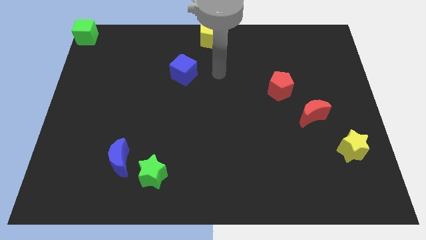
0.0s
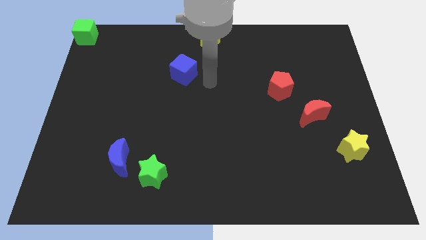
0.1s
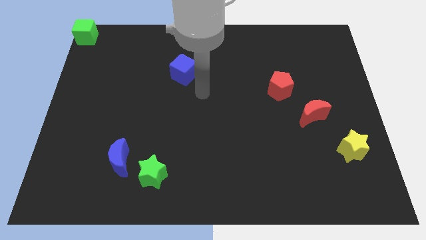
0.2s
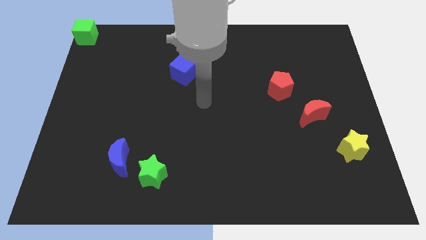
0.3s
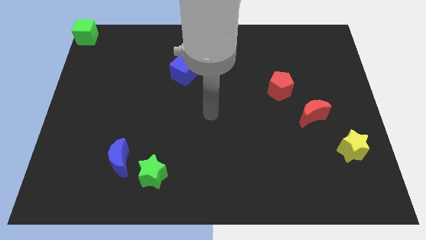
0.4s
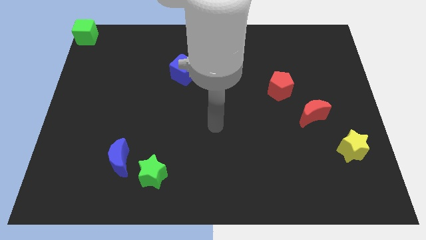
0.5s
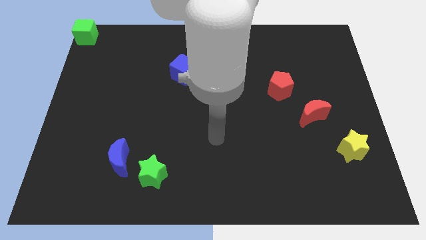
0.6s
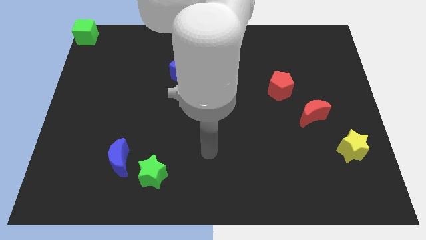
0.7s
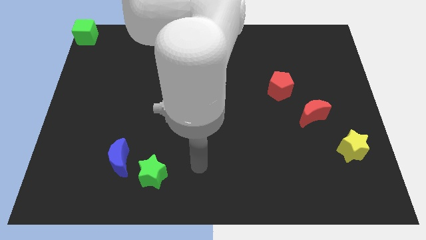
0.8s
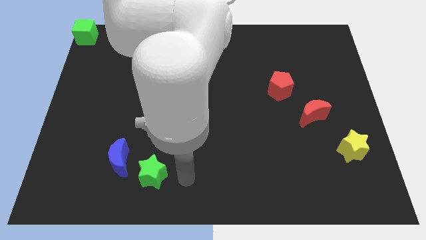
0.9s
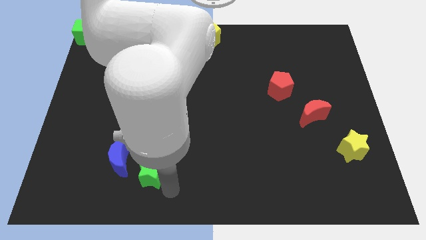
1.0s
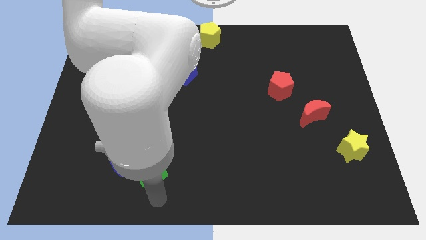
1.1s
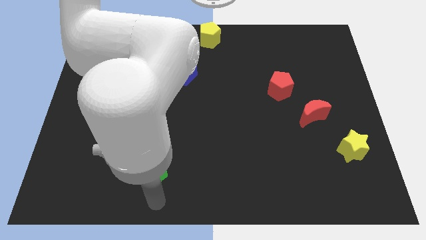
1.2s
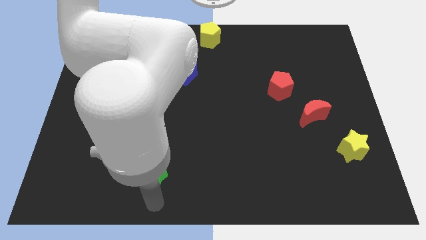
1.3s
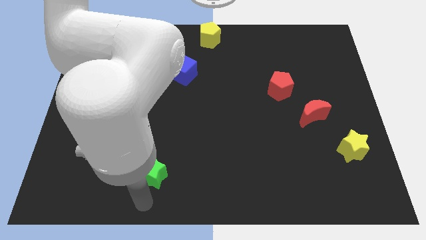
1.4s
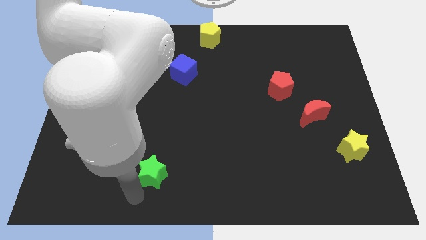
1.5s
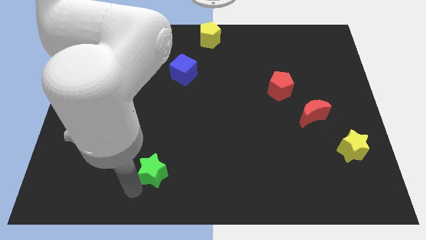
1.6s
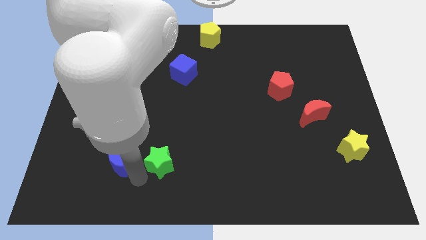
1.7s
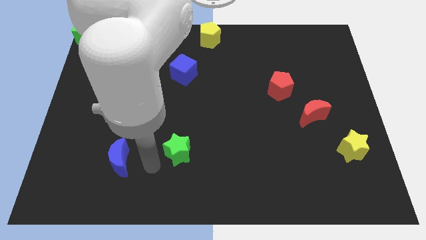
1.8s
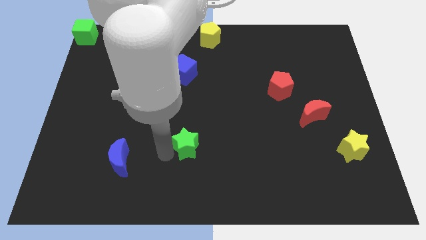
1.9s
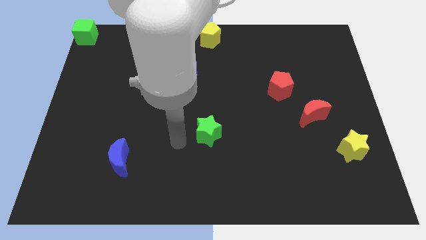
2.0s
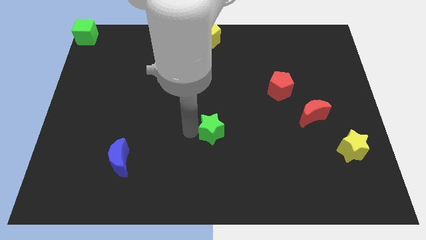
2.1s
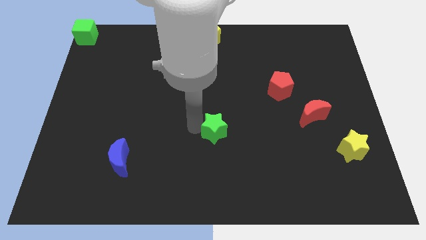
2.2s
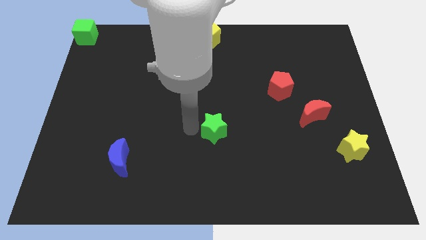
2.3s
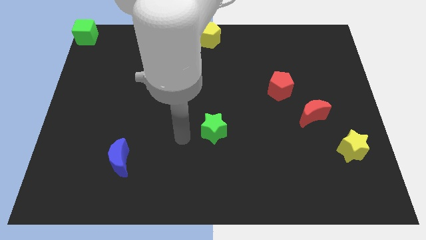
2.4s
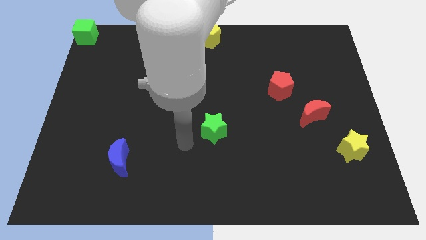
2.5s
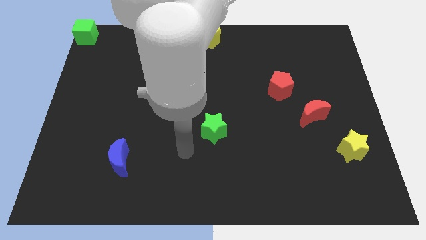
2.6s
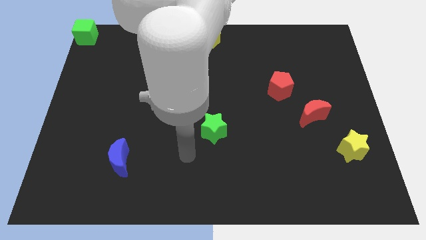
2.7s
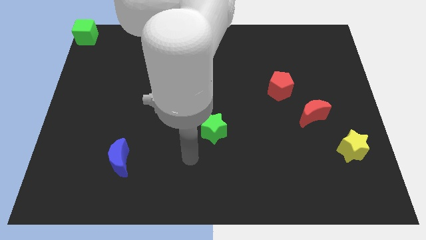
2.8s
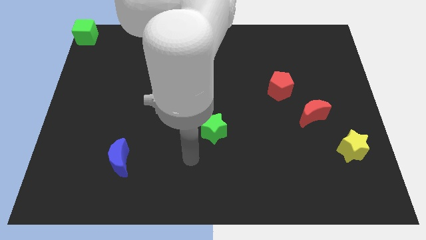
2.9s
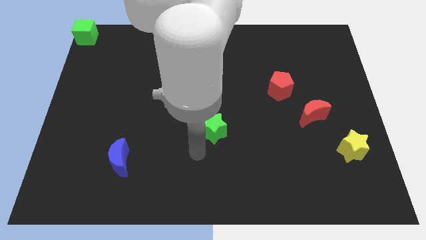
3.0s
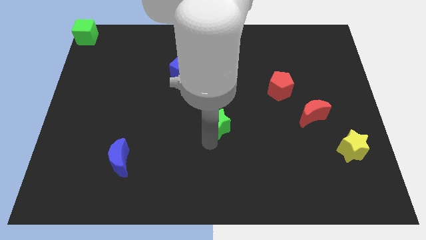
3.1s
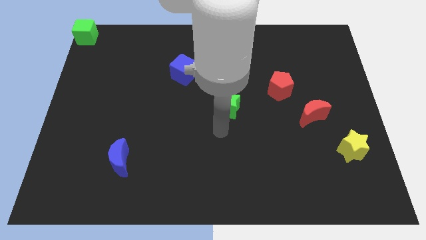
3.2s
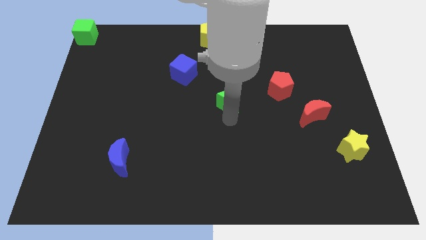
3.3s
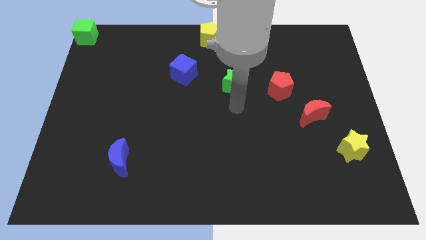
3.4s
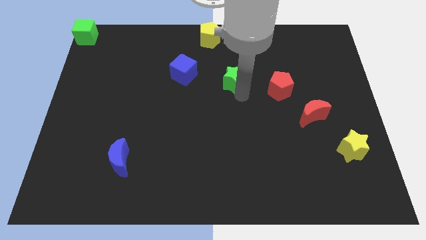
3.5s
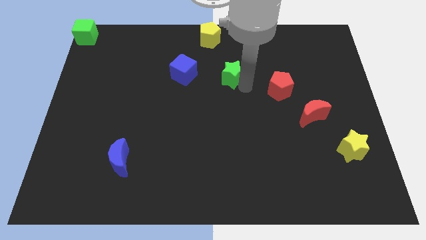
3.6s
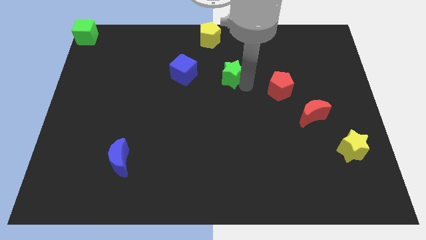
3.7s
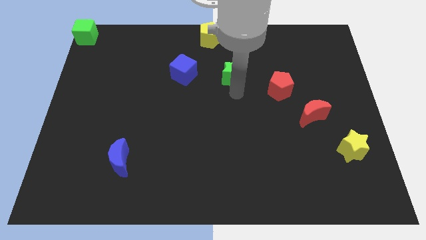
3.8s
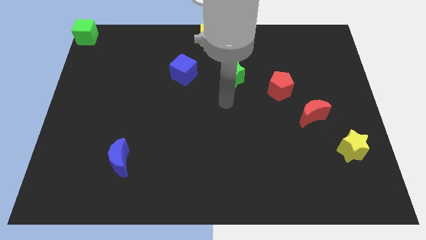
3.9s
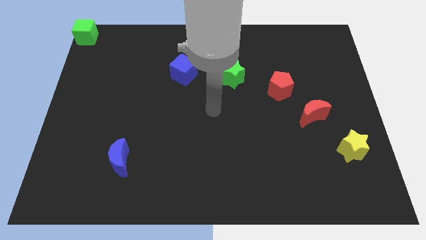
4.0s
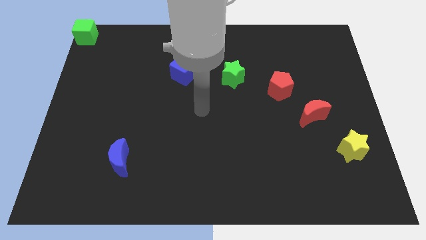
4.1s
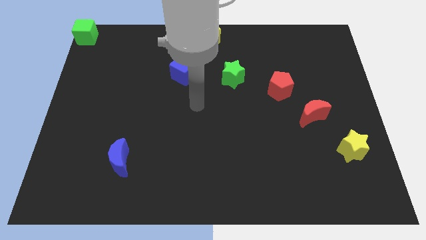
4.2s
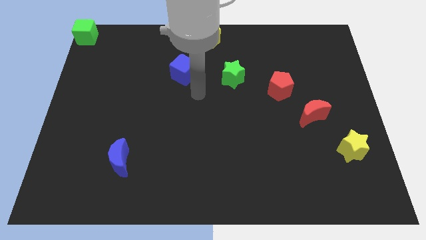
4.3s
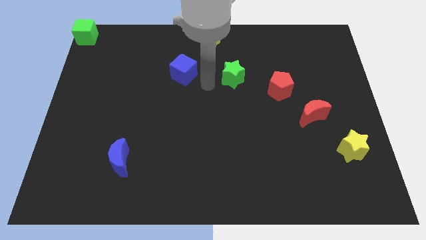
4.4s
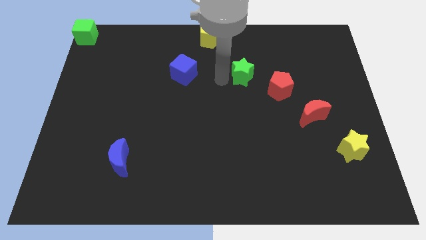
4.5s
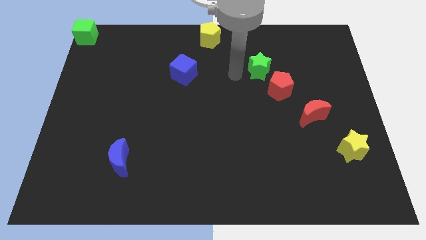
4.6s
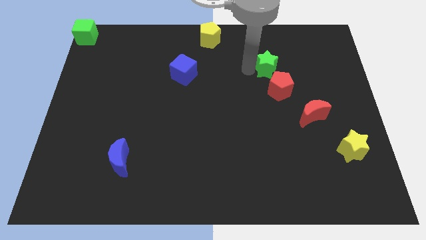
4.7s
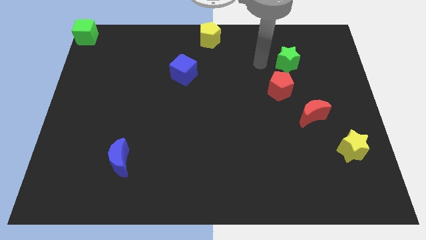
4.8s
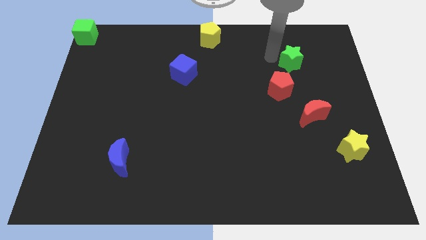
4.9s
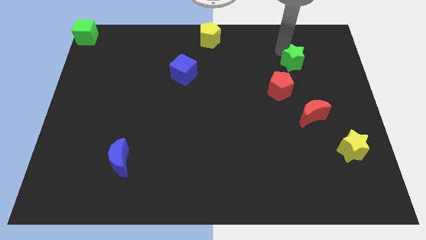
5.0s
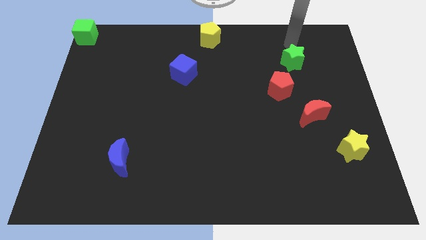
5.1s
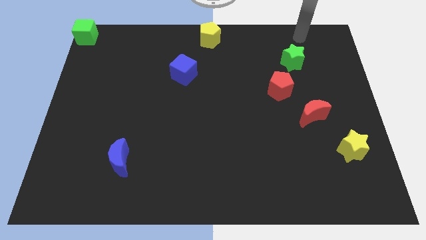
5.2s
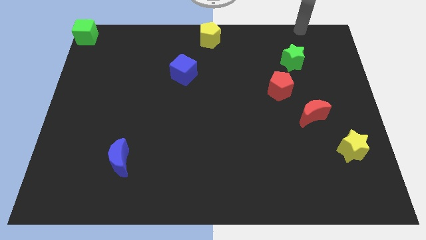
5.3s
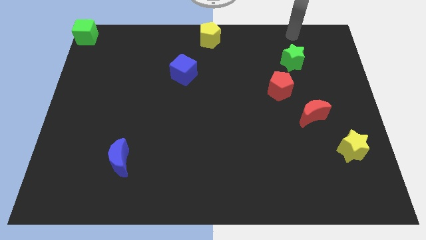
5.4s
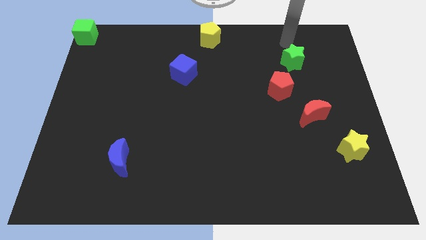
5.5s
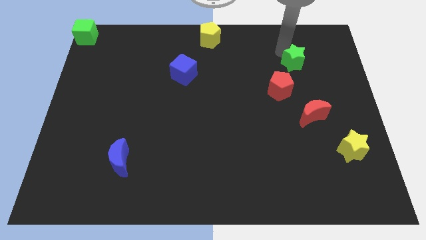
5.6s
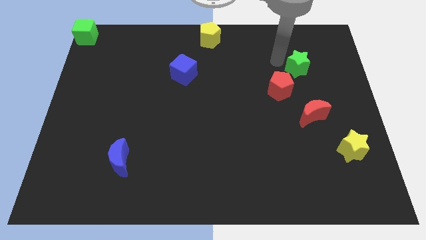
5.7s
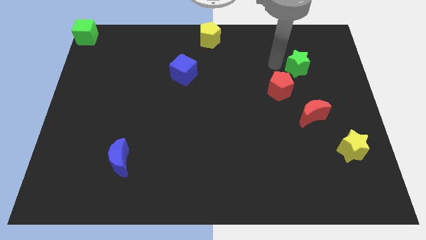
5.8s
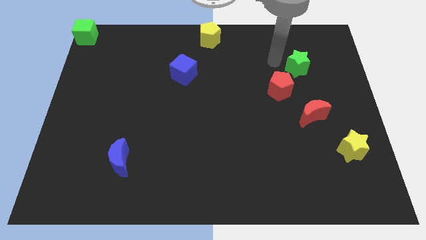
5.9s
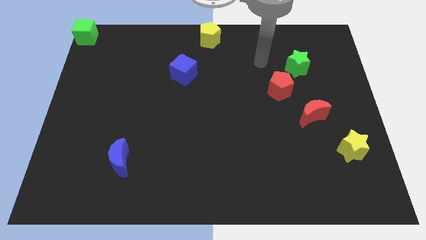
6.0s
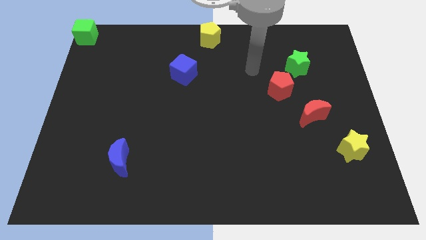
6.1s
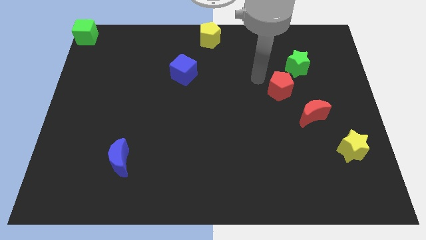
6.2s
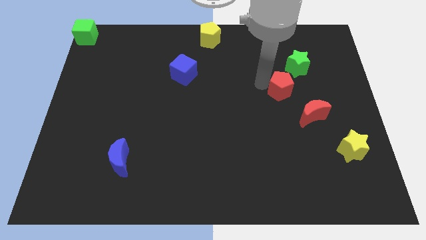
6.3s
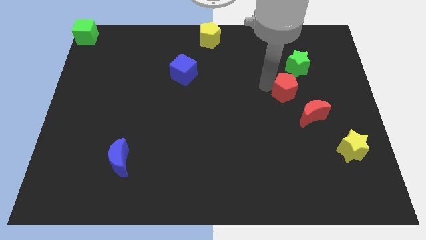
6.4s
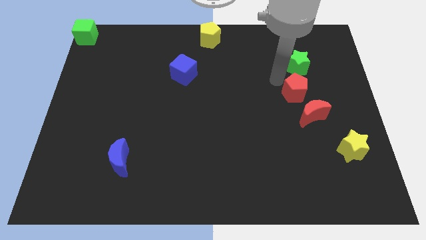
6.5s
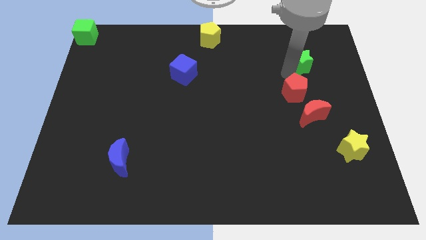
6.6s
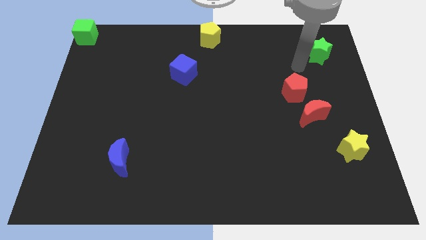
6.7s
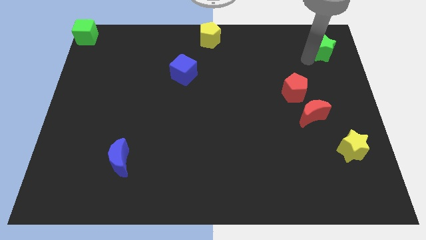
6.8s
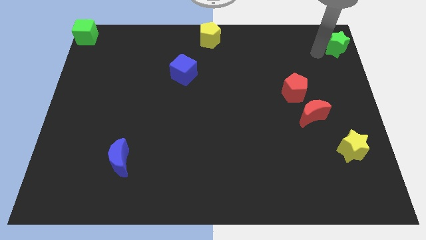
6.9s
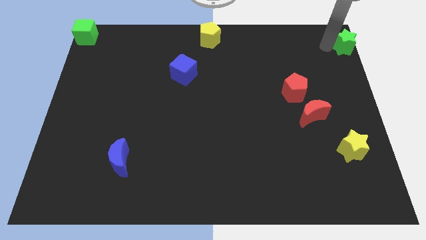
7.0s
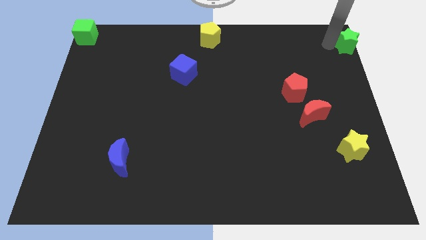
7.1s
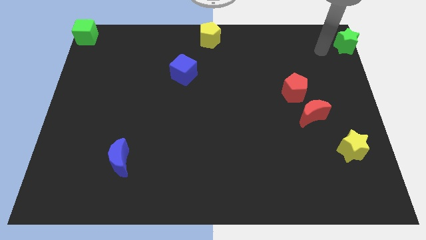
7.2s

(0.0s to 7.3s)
move the green star to the top right corner of the board

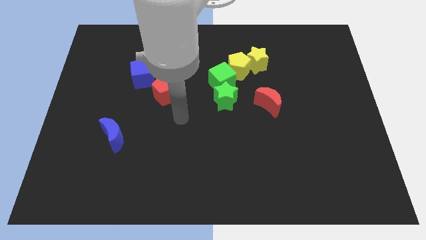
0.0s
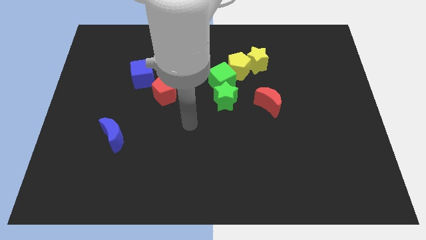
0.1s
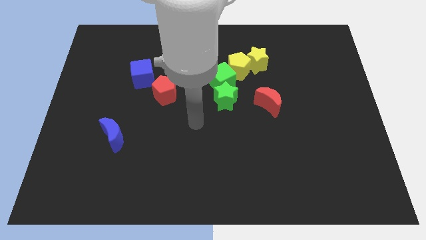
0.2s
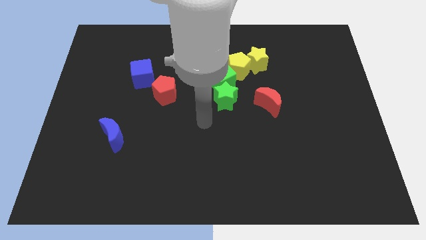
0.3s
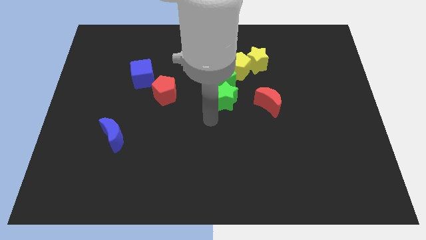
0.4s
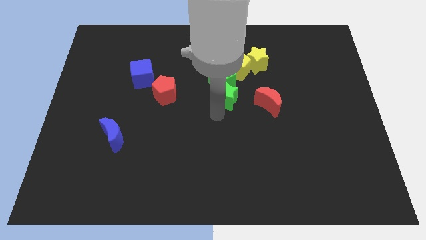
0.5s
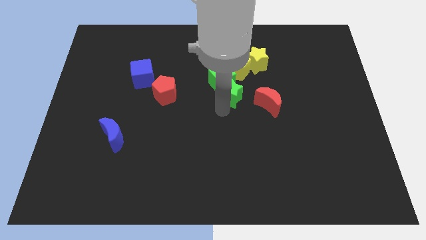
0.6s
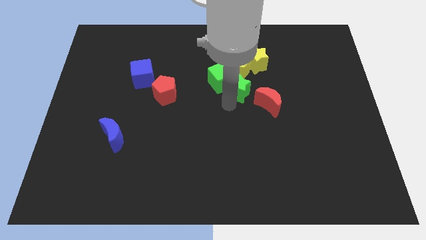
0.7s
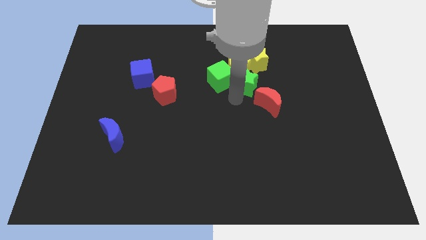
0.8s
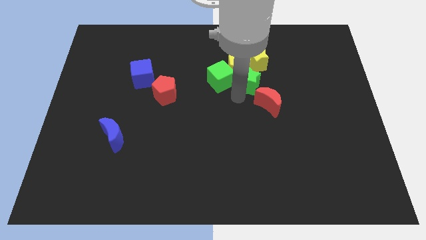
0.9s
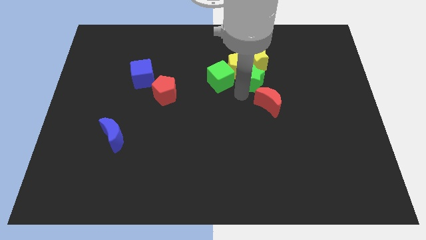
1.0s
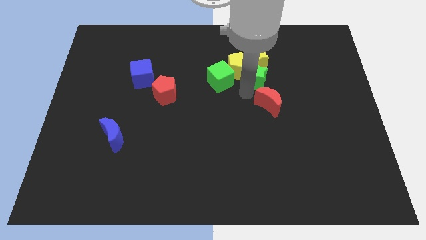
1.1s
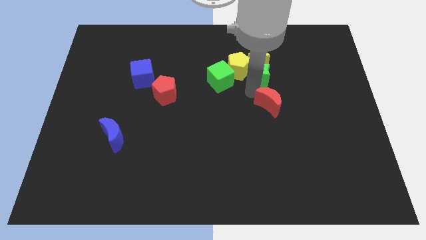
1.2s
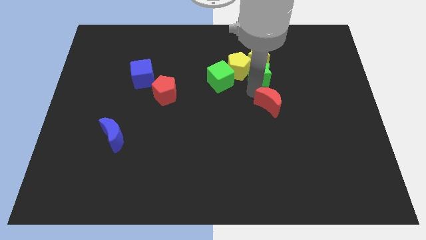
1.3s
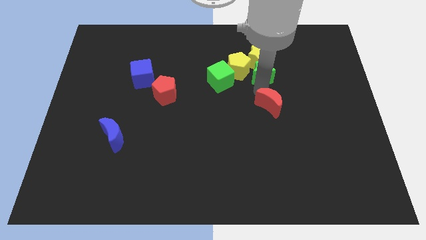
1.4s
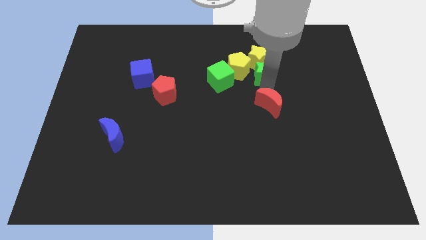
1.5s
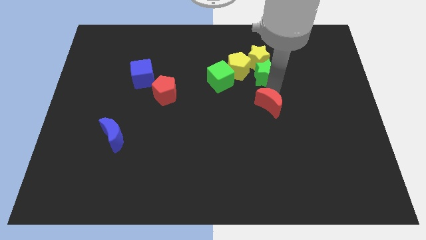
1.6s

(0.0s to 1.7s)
move the green star in between the yellow star and red crescent
